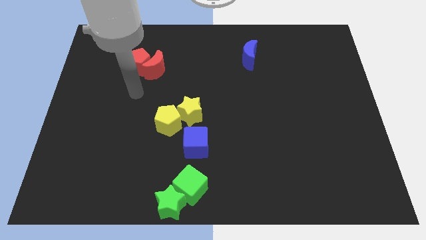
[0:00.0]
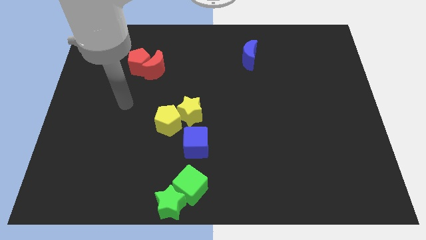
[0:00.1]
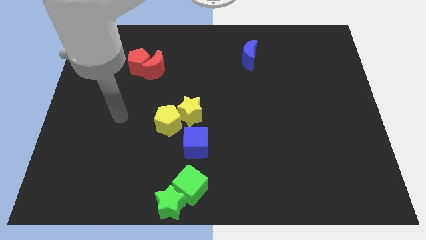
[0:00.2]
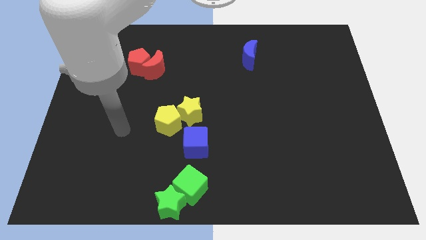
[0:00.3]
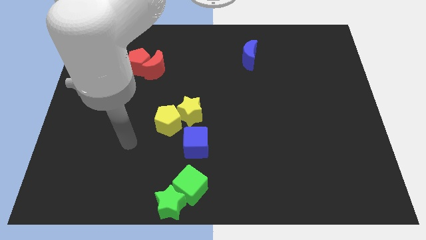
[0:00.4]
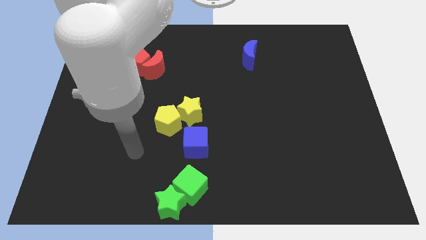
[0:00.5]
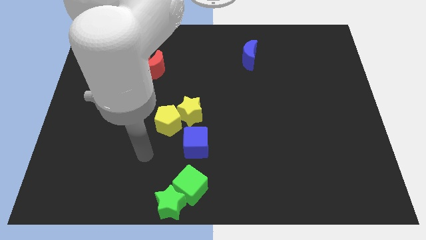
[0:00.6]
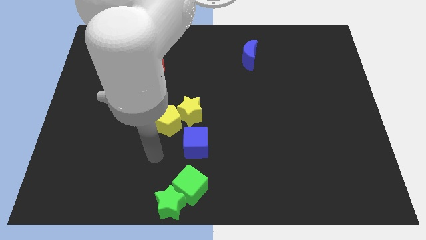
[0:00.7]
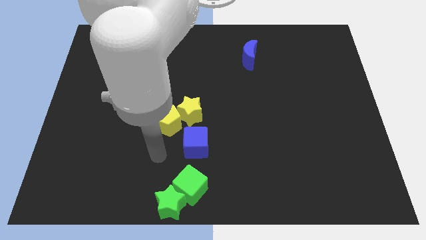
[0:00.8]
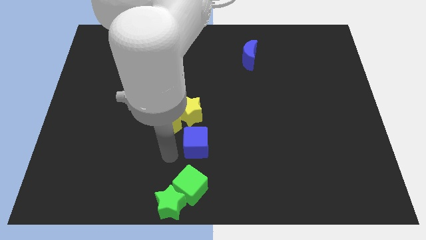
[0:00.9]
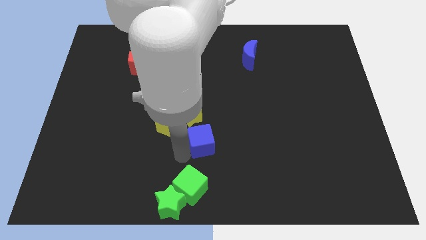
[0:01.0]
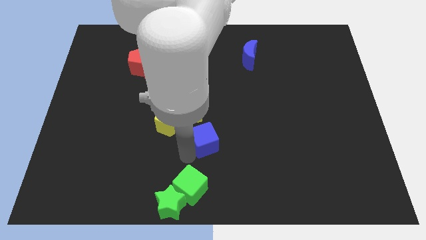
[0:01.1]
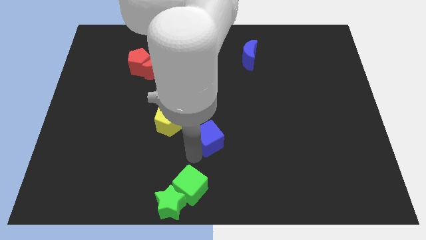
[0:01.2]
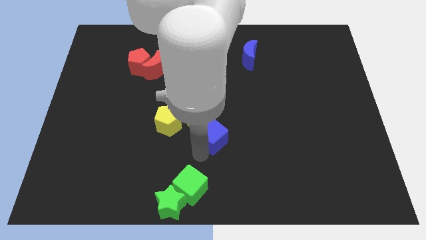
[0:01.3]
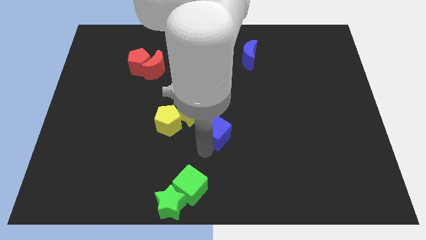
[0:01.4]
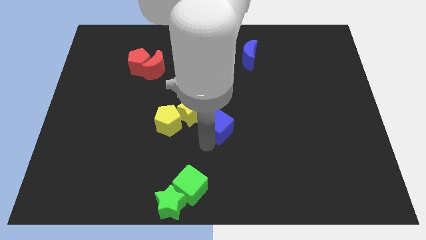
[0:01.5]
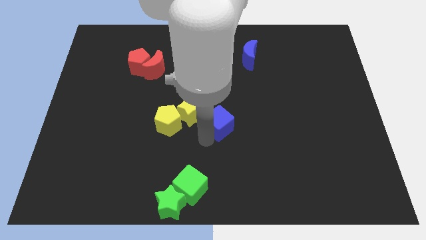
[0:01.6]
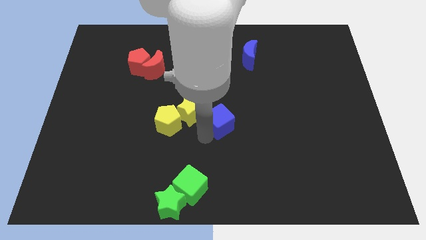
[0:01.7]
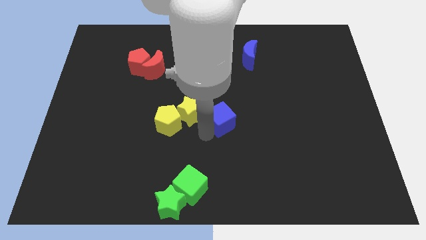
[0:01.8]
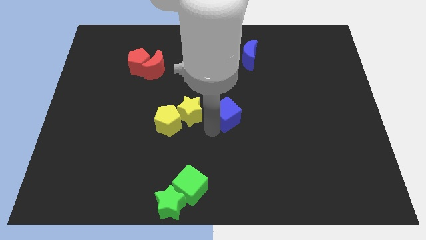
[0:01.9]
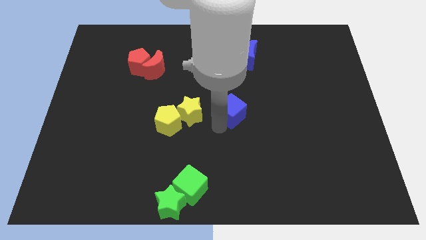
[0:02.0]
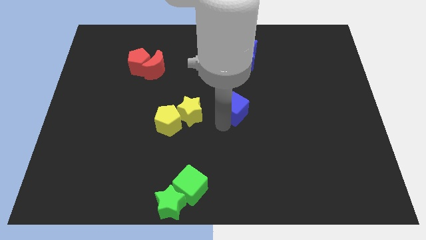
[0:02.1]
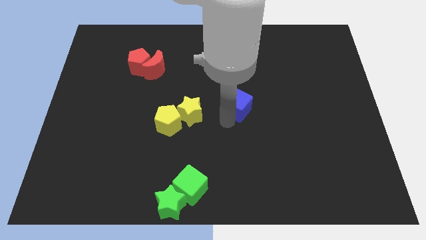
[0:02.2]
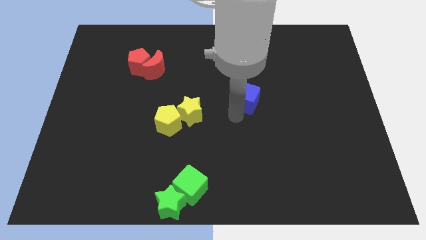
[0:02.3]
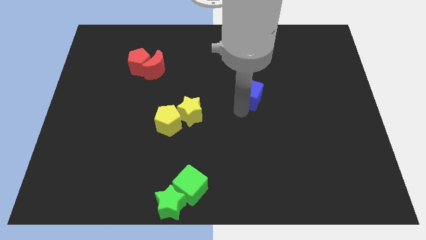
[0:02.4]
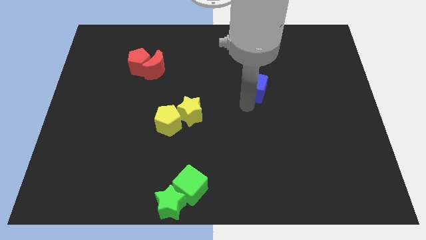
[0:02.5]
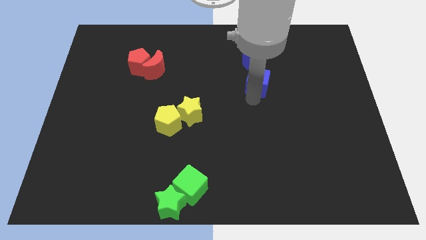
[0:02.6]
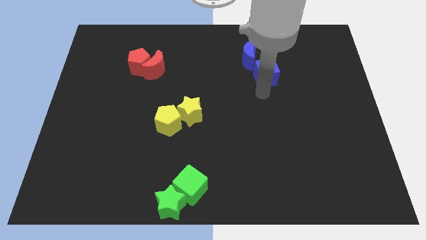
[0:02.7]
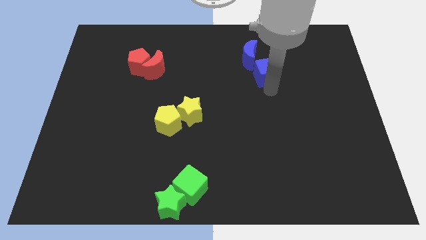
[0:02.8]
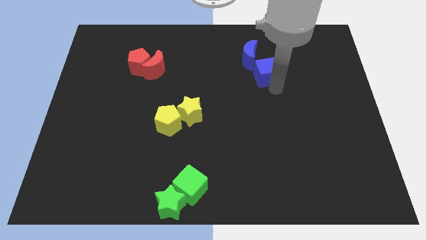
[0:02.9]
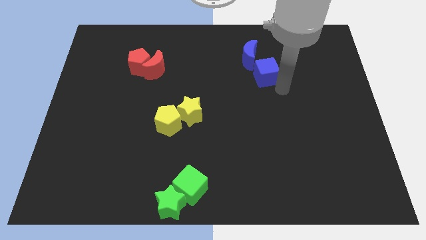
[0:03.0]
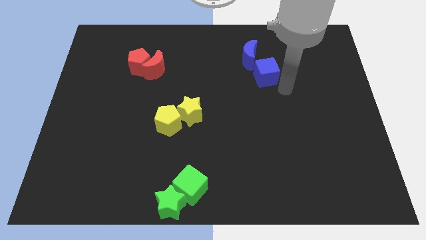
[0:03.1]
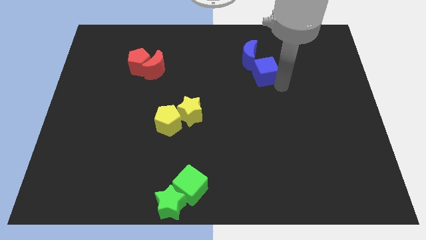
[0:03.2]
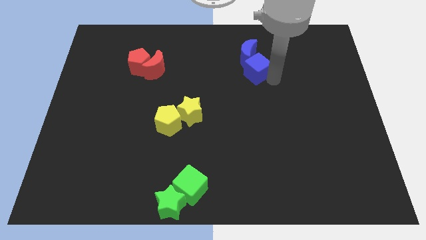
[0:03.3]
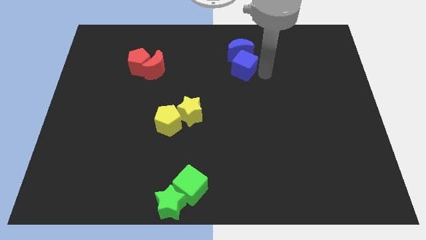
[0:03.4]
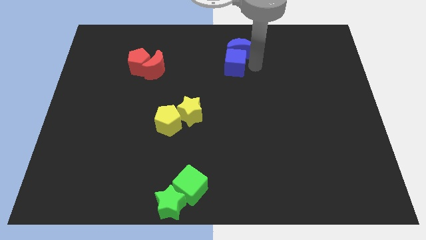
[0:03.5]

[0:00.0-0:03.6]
group up the blue blocks at the top side of the table

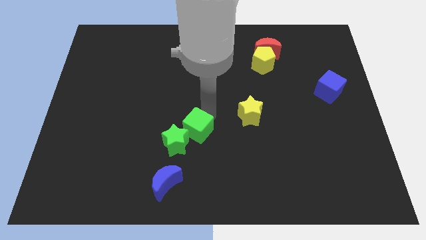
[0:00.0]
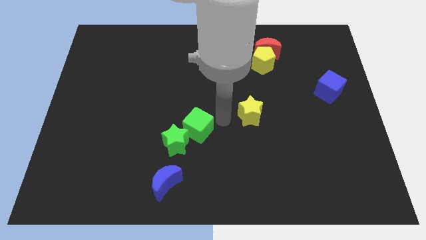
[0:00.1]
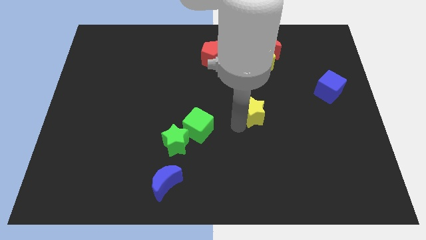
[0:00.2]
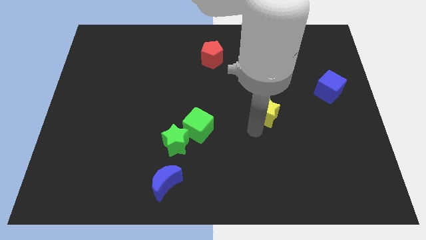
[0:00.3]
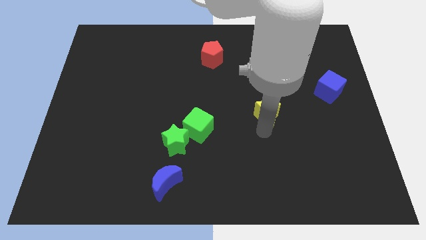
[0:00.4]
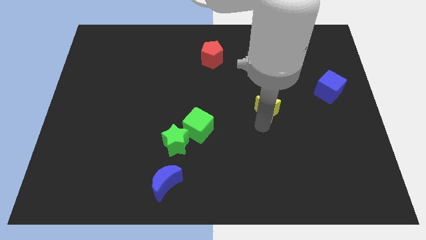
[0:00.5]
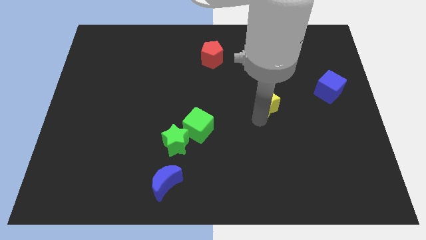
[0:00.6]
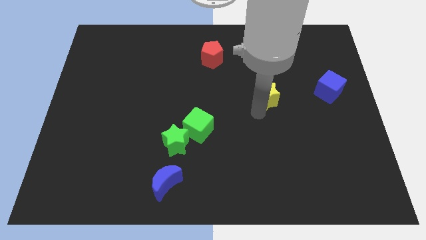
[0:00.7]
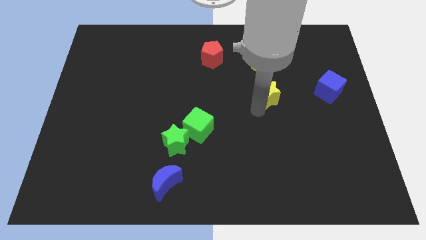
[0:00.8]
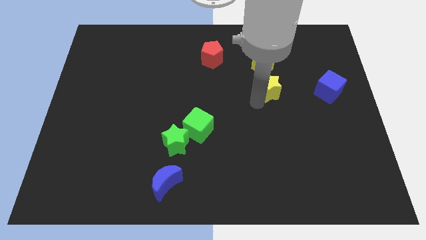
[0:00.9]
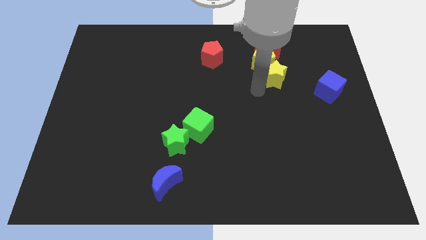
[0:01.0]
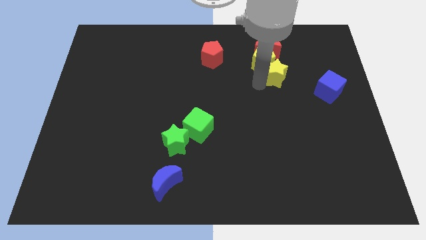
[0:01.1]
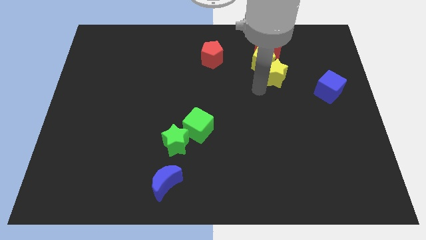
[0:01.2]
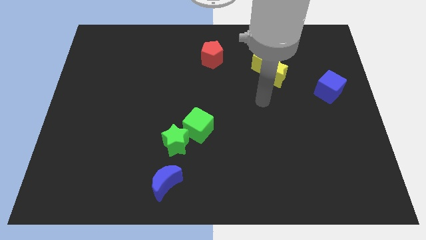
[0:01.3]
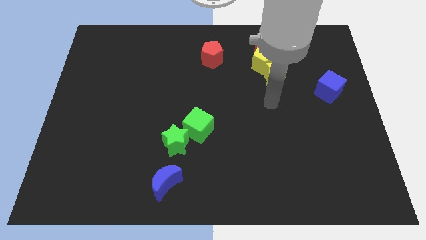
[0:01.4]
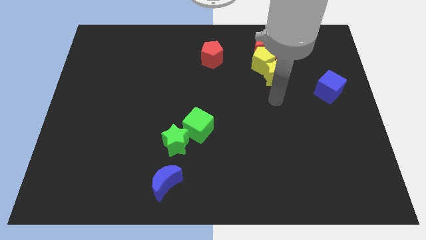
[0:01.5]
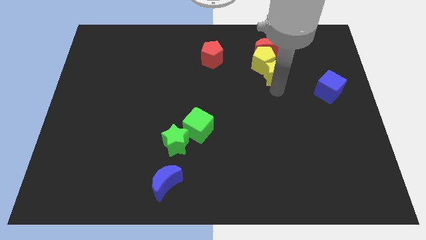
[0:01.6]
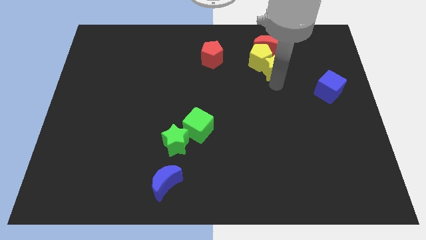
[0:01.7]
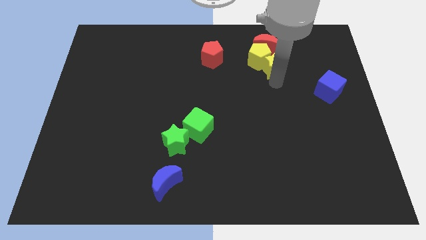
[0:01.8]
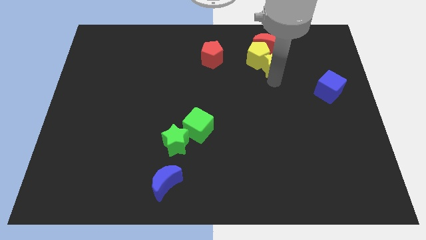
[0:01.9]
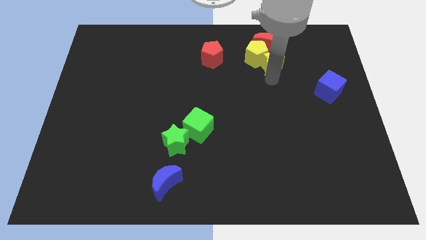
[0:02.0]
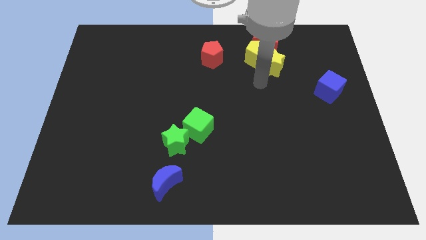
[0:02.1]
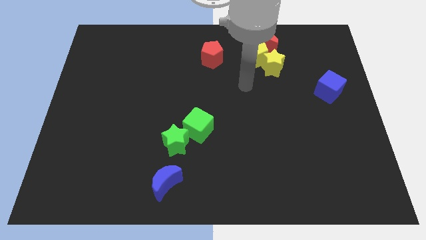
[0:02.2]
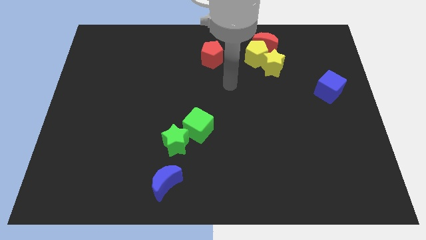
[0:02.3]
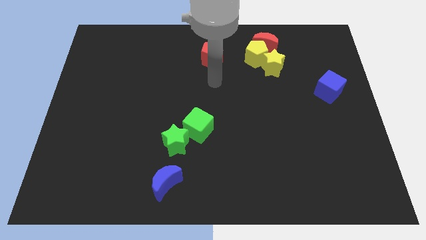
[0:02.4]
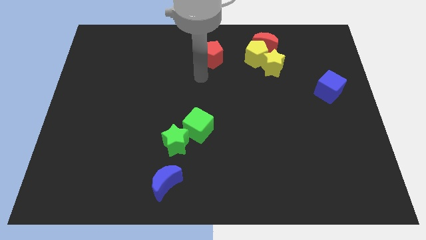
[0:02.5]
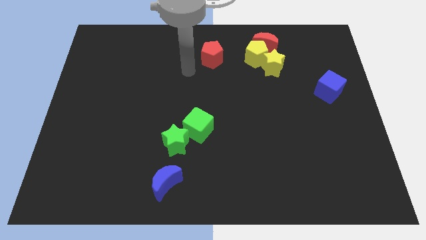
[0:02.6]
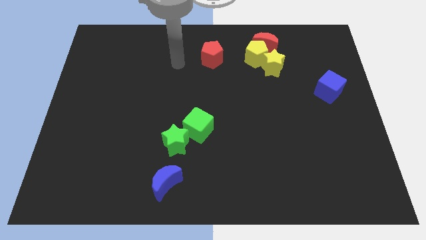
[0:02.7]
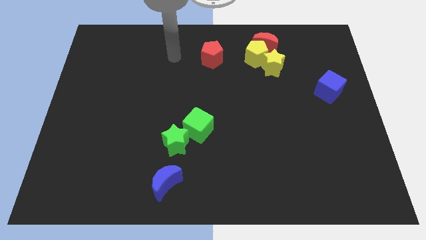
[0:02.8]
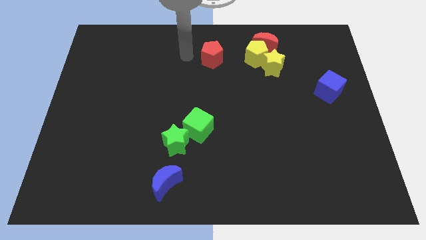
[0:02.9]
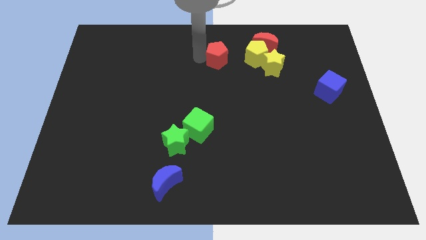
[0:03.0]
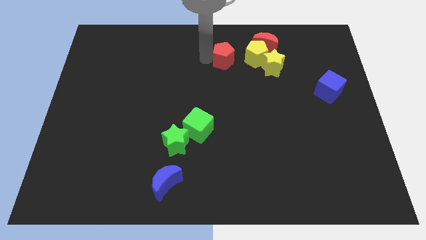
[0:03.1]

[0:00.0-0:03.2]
move yellow star into the yellow pentagon

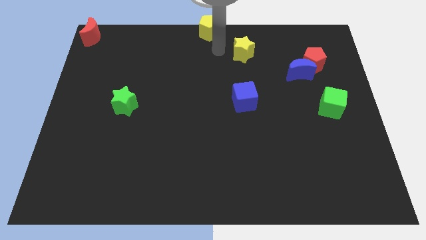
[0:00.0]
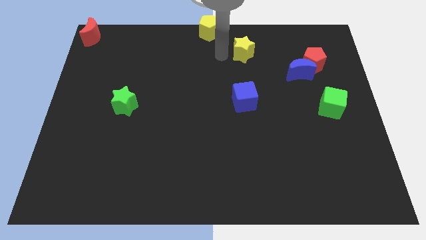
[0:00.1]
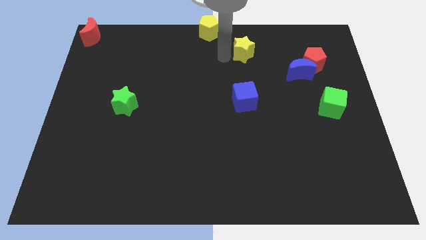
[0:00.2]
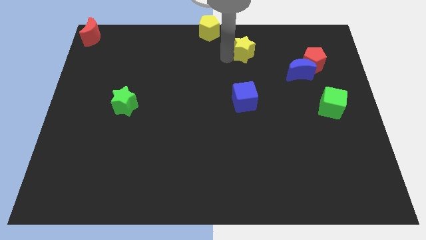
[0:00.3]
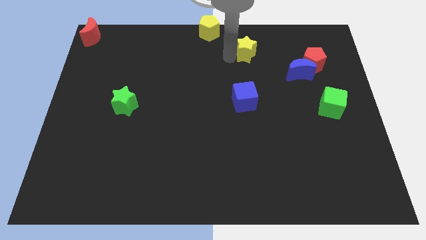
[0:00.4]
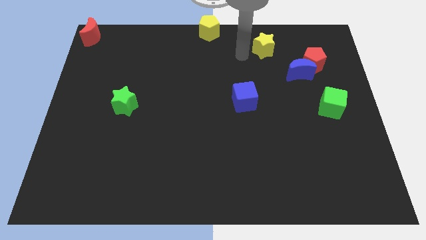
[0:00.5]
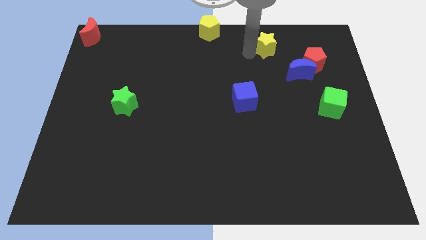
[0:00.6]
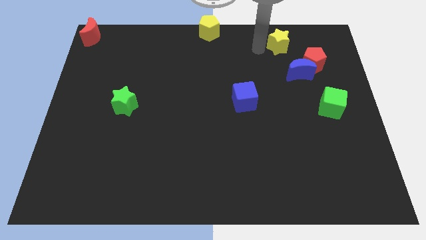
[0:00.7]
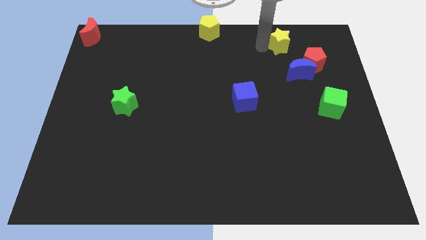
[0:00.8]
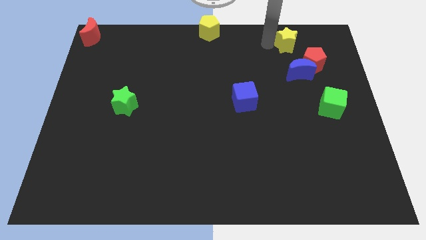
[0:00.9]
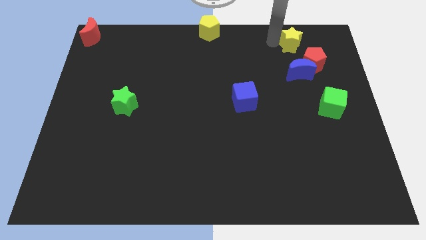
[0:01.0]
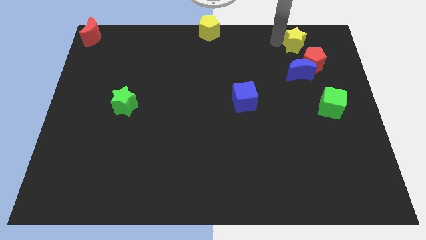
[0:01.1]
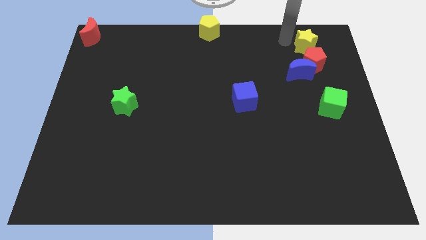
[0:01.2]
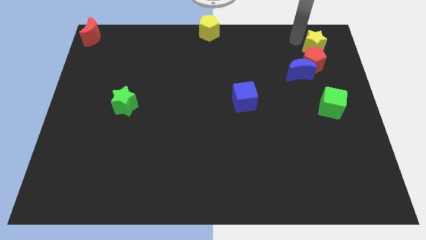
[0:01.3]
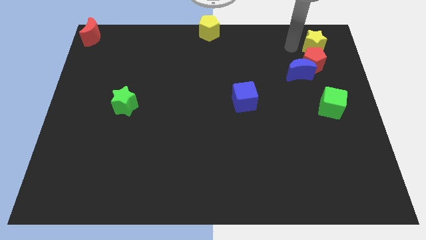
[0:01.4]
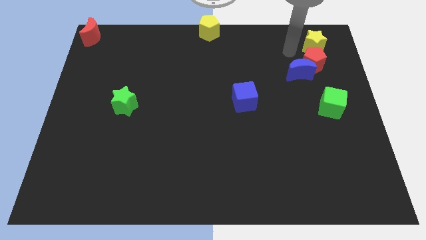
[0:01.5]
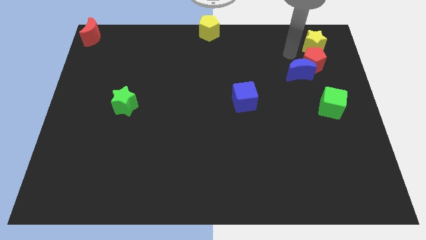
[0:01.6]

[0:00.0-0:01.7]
put the yellow star at the top side of the red pentagon

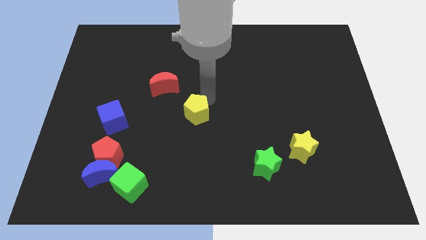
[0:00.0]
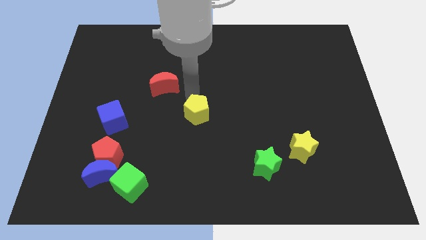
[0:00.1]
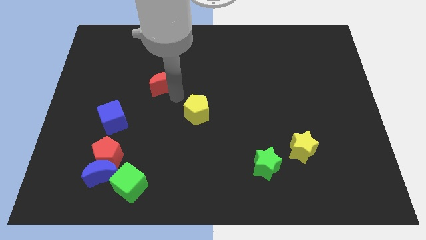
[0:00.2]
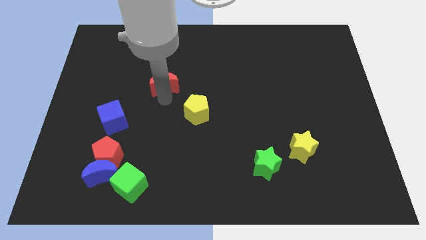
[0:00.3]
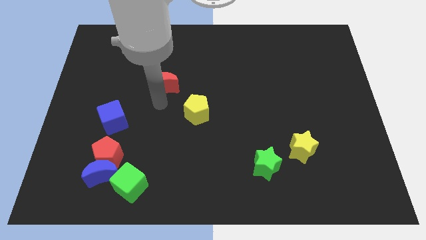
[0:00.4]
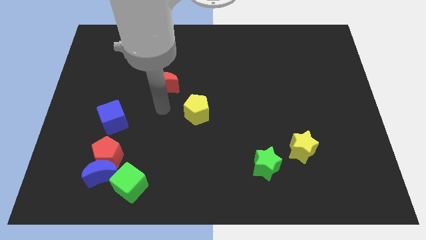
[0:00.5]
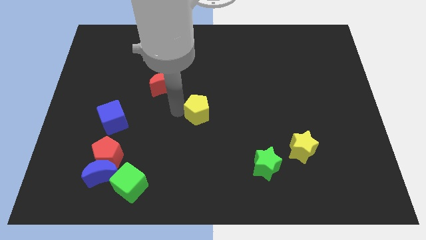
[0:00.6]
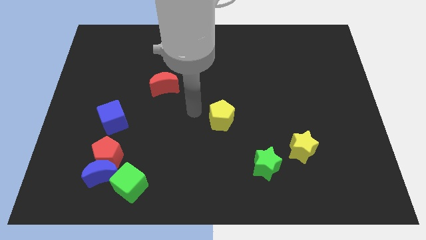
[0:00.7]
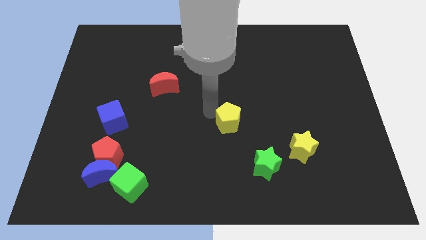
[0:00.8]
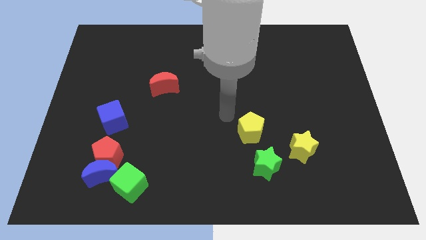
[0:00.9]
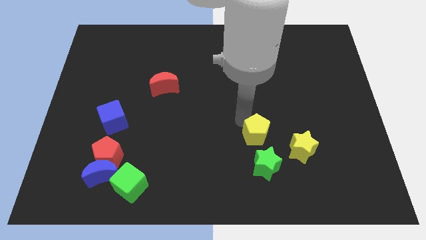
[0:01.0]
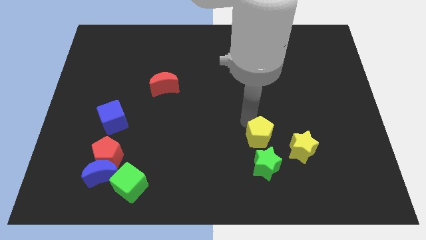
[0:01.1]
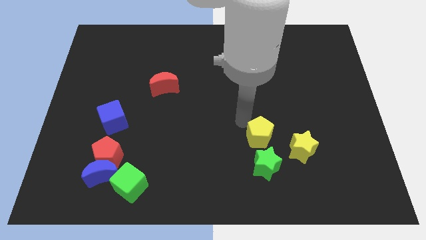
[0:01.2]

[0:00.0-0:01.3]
move the yellow pentagon to the top left side of the greens tar
